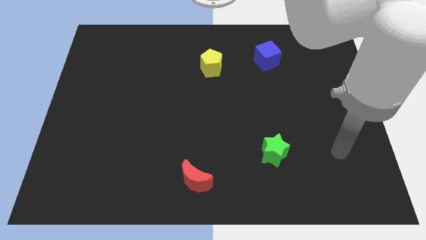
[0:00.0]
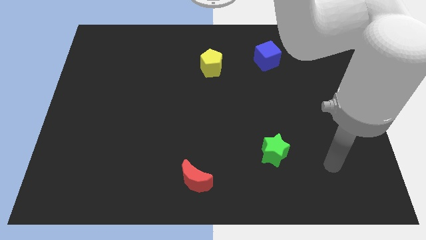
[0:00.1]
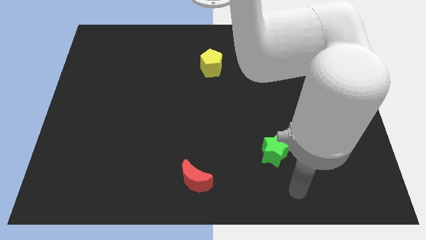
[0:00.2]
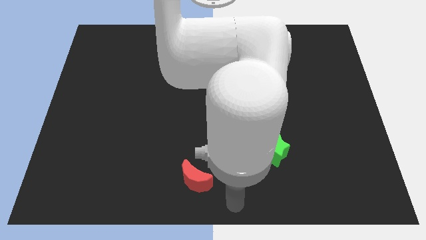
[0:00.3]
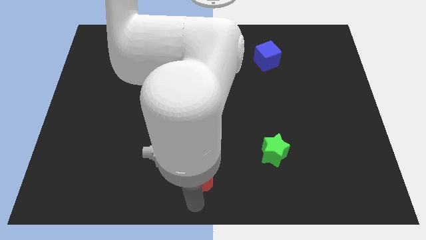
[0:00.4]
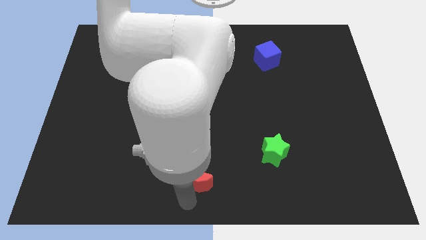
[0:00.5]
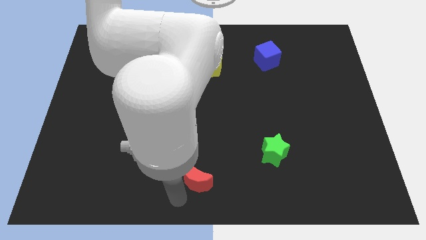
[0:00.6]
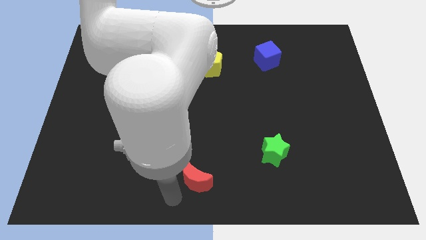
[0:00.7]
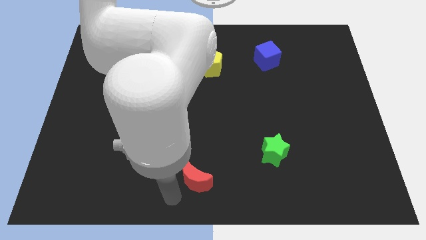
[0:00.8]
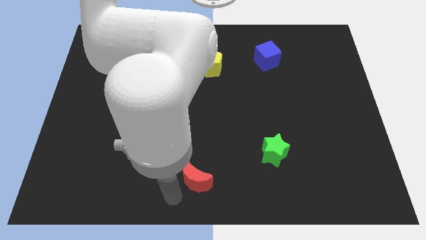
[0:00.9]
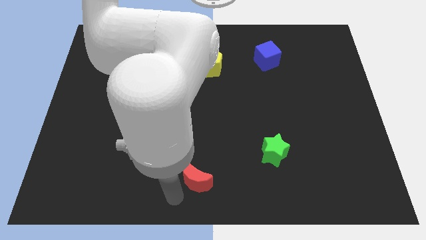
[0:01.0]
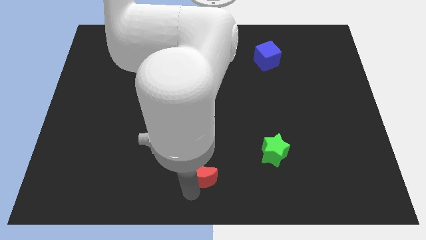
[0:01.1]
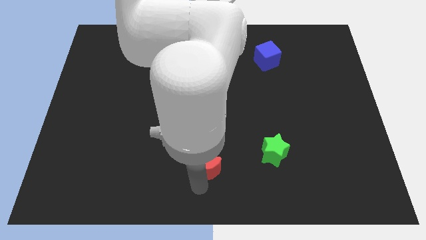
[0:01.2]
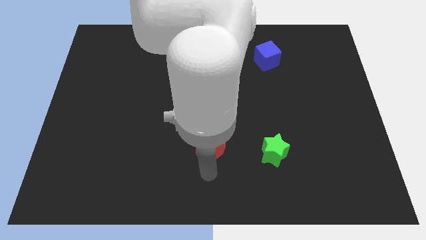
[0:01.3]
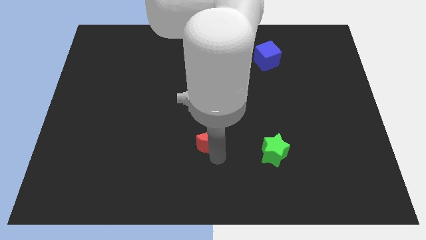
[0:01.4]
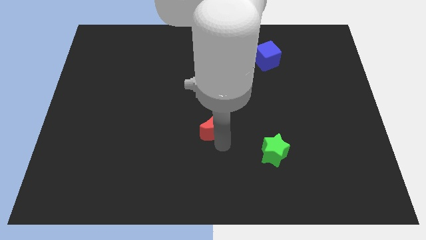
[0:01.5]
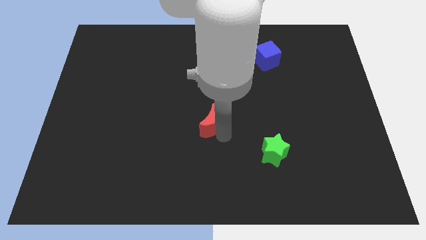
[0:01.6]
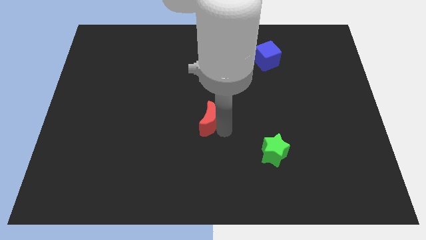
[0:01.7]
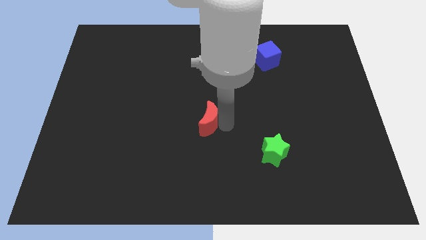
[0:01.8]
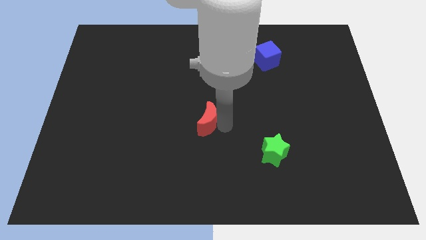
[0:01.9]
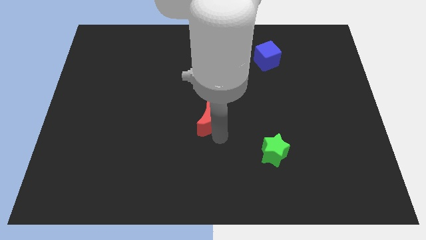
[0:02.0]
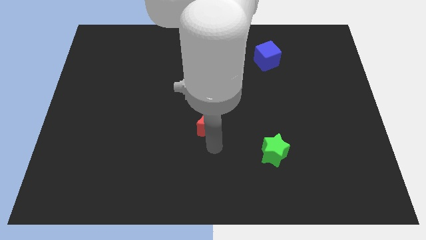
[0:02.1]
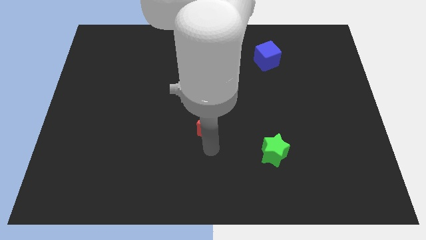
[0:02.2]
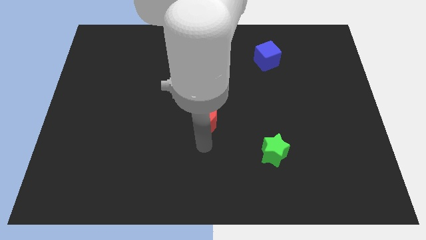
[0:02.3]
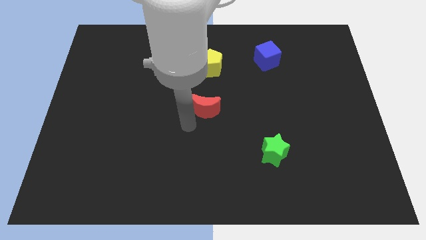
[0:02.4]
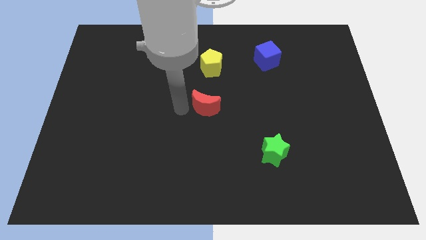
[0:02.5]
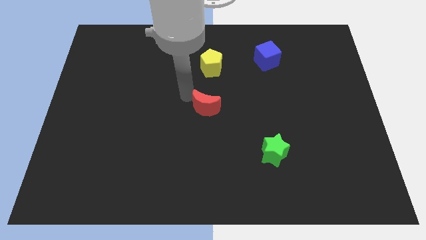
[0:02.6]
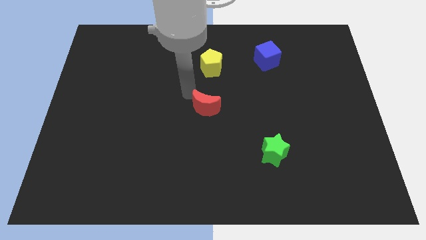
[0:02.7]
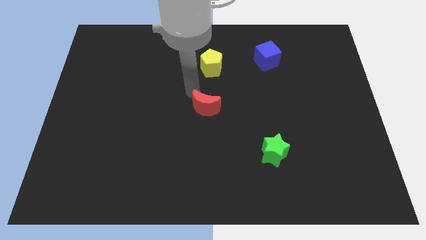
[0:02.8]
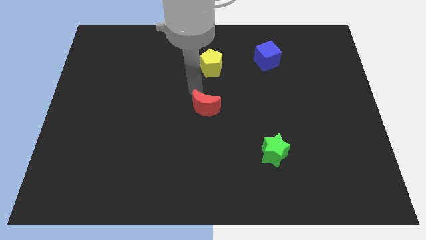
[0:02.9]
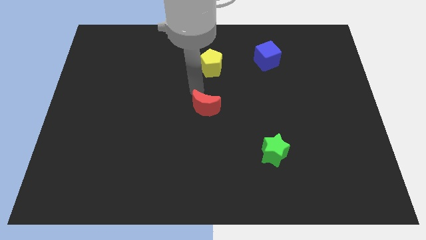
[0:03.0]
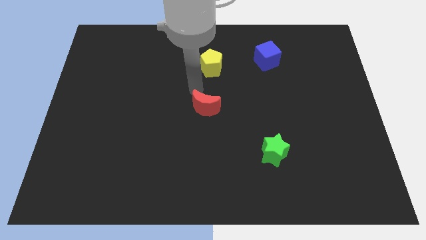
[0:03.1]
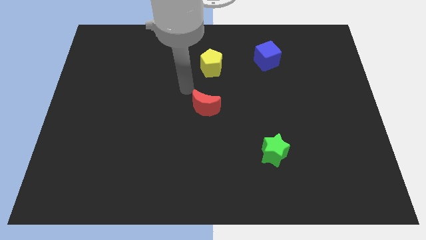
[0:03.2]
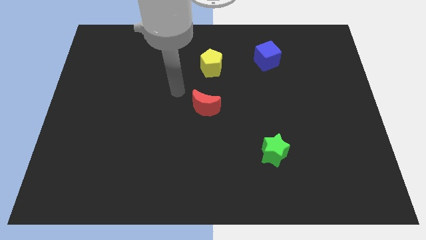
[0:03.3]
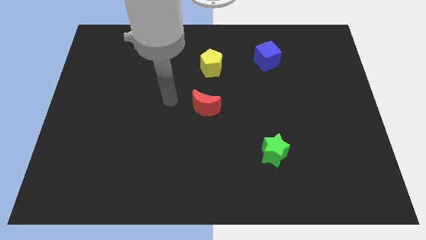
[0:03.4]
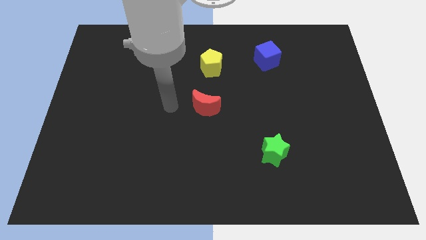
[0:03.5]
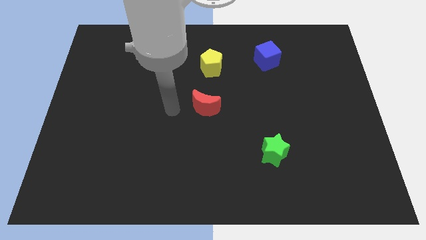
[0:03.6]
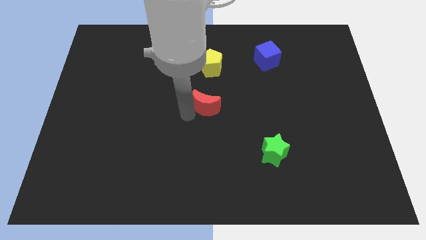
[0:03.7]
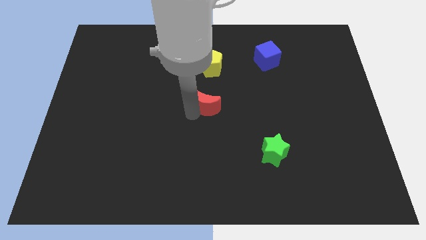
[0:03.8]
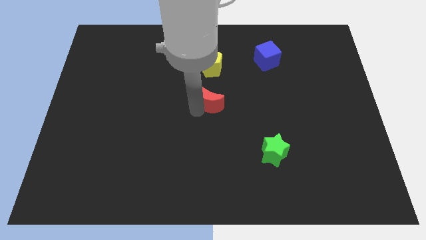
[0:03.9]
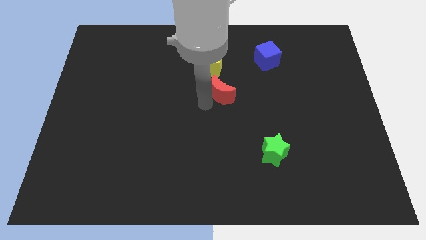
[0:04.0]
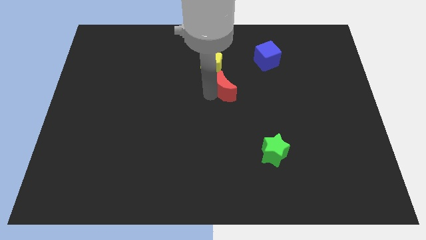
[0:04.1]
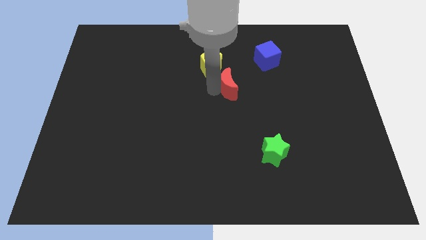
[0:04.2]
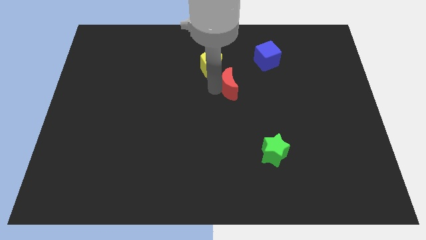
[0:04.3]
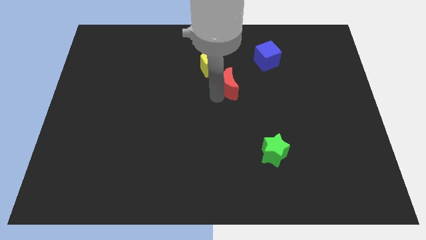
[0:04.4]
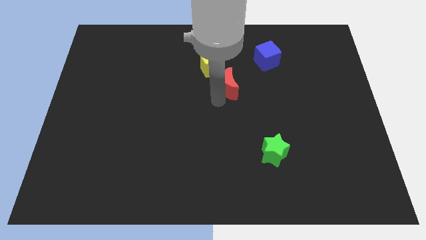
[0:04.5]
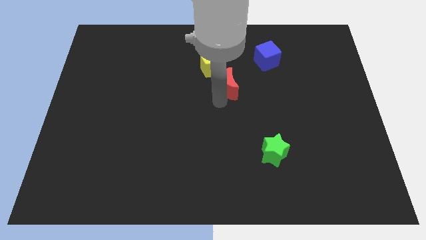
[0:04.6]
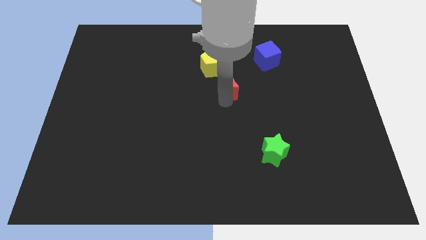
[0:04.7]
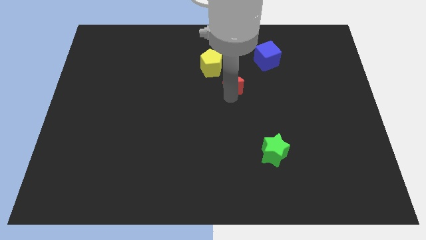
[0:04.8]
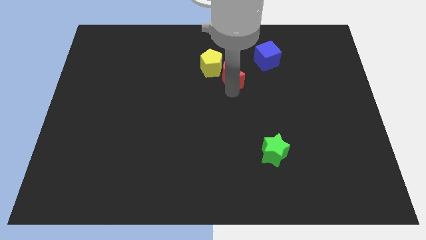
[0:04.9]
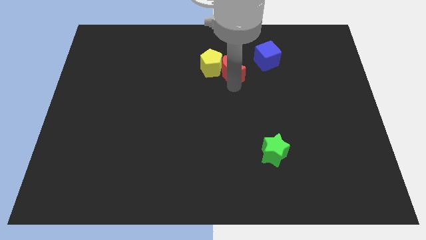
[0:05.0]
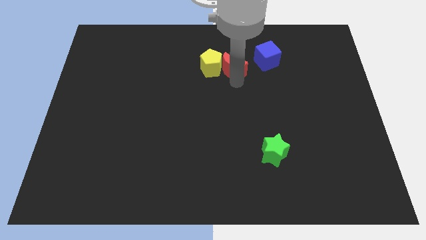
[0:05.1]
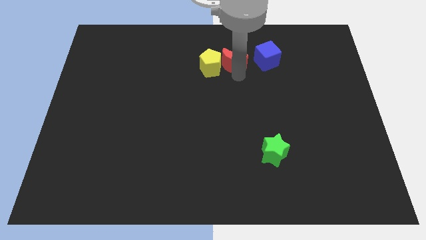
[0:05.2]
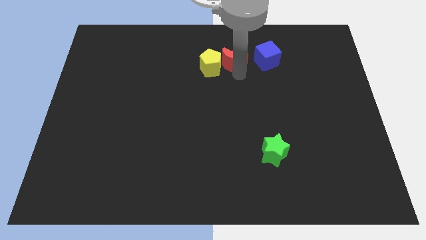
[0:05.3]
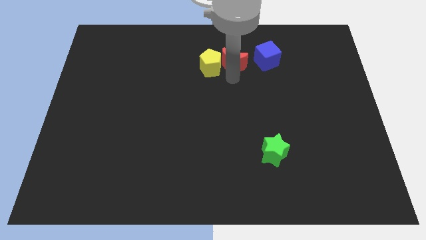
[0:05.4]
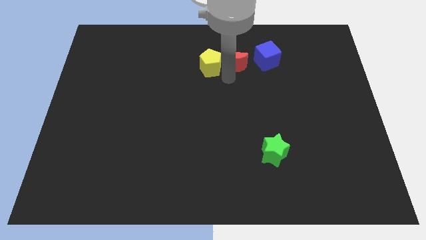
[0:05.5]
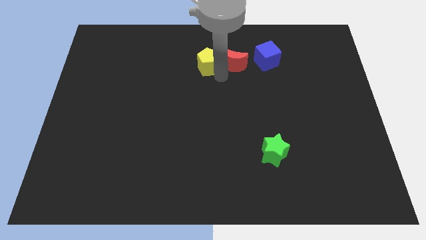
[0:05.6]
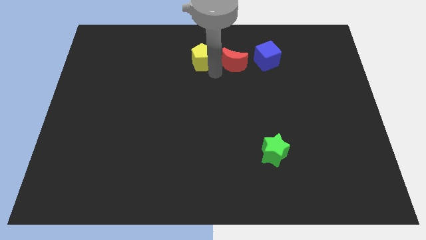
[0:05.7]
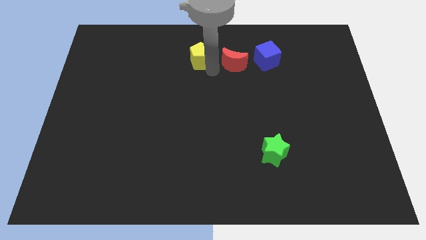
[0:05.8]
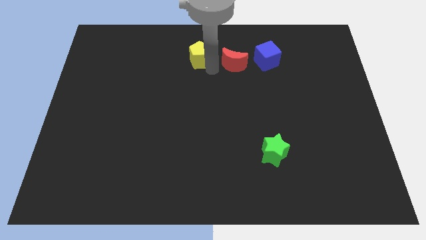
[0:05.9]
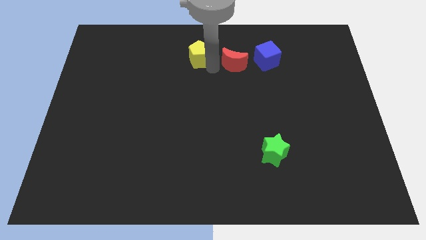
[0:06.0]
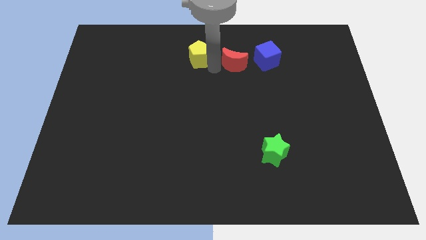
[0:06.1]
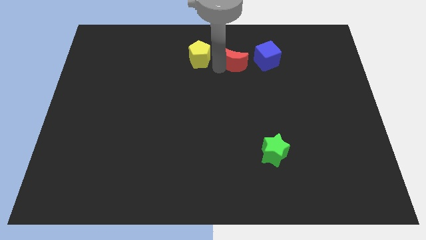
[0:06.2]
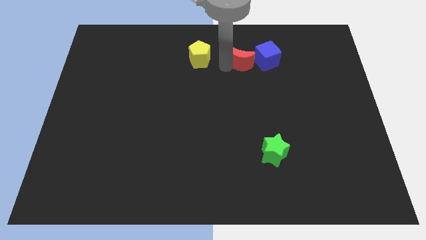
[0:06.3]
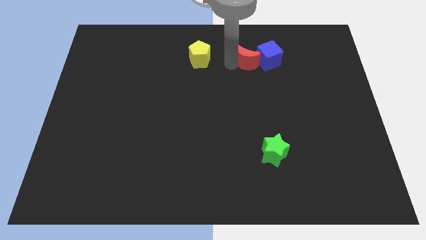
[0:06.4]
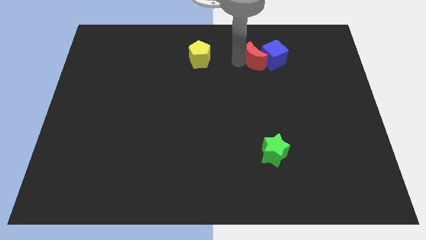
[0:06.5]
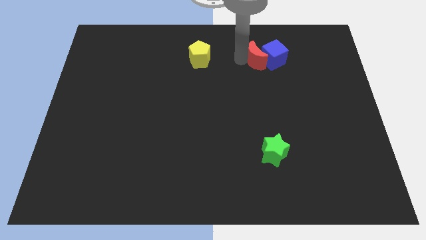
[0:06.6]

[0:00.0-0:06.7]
put the red moon next to the blue cube

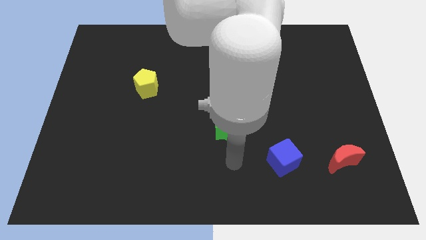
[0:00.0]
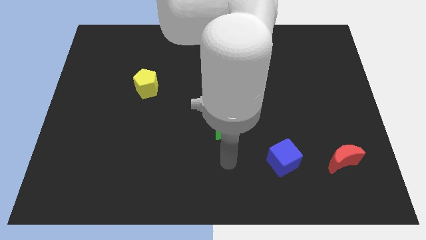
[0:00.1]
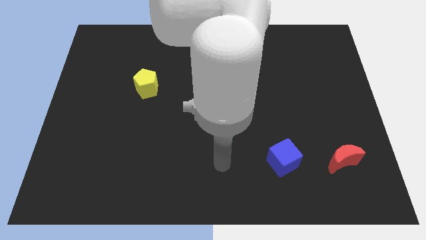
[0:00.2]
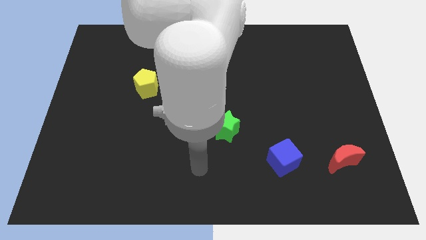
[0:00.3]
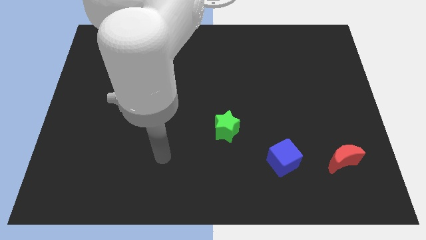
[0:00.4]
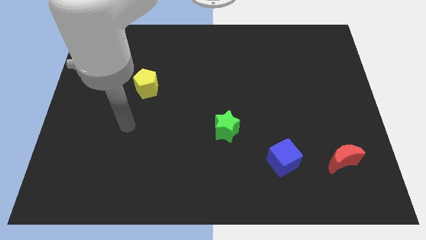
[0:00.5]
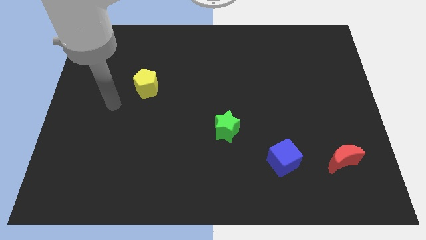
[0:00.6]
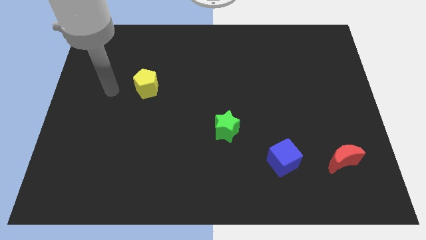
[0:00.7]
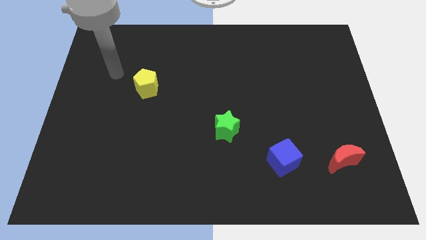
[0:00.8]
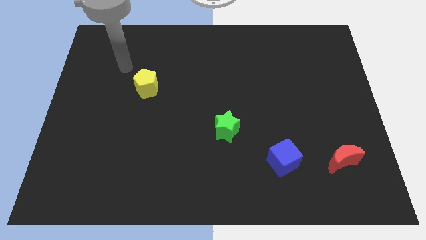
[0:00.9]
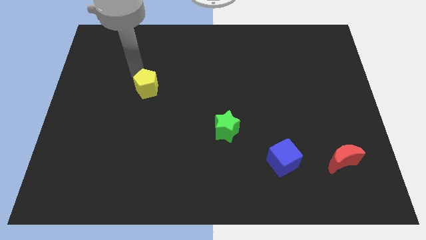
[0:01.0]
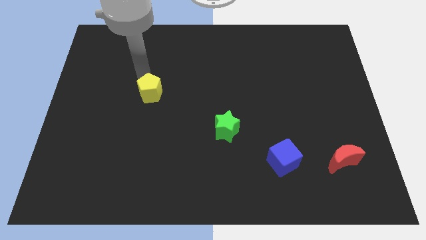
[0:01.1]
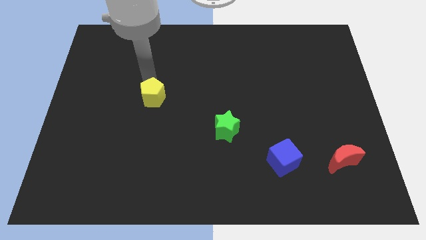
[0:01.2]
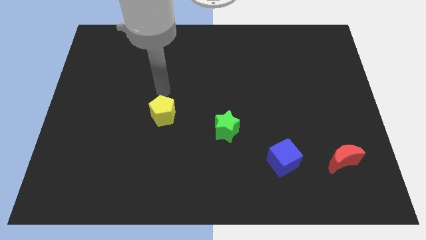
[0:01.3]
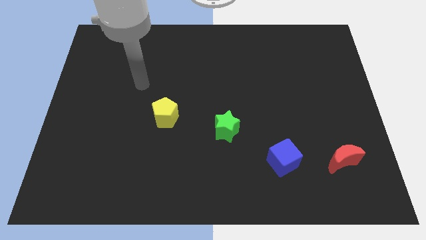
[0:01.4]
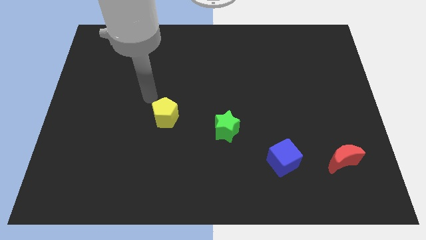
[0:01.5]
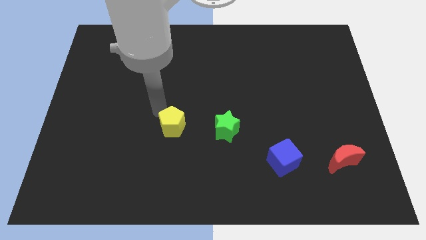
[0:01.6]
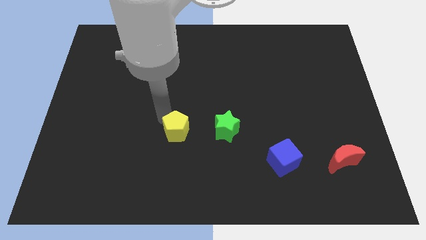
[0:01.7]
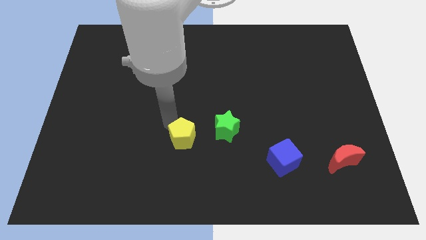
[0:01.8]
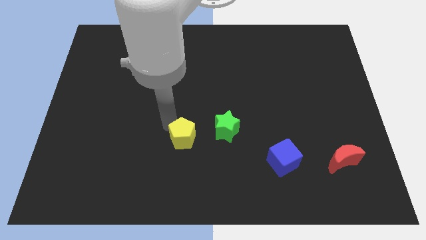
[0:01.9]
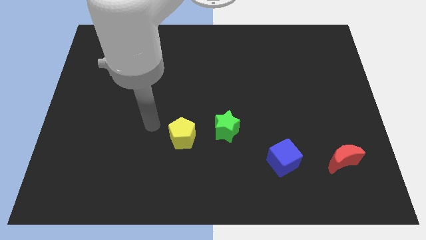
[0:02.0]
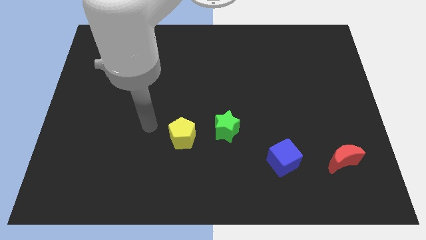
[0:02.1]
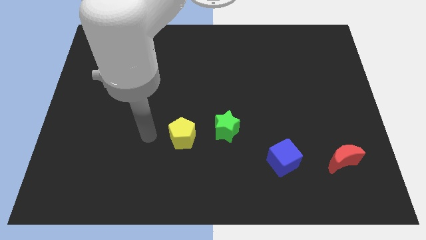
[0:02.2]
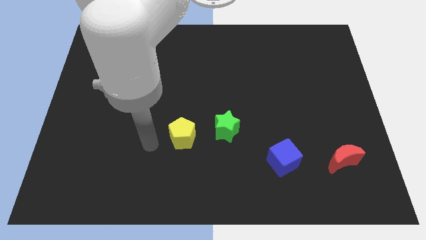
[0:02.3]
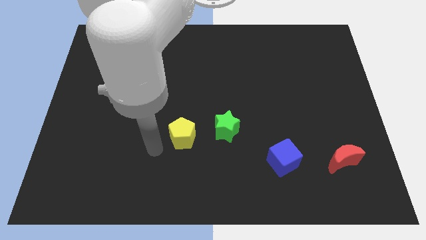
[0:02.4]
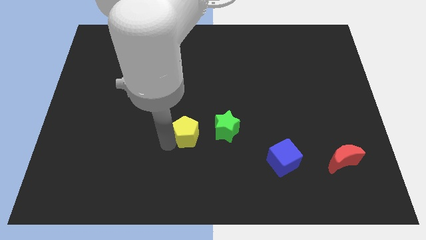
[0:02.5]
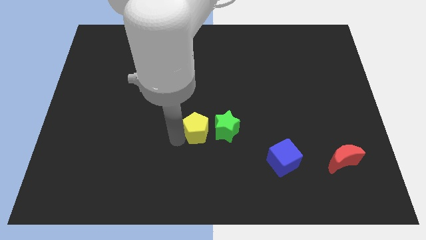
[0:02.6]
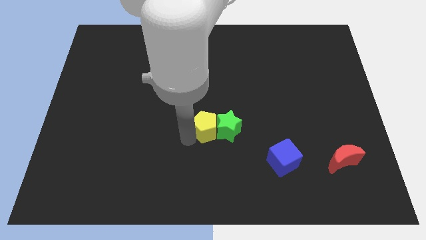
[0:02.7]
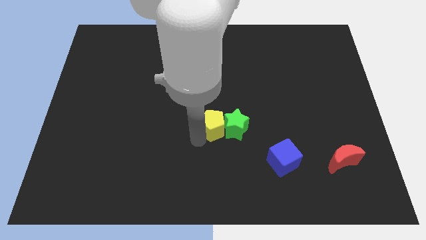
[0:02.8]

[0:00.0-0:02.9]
move the yellow block next to the green block
